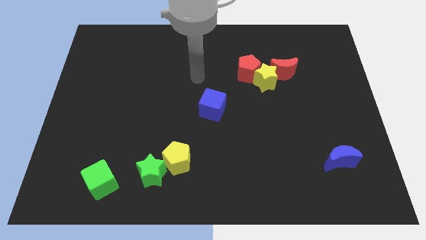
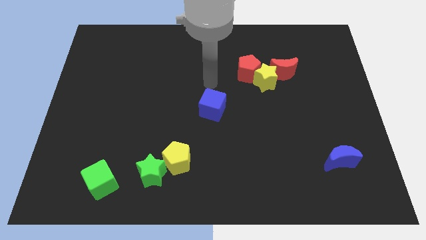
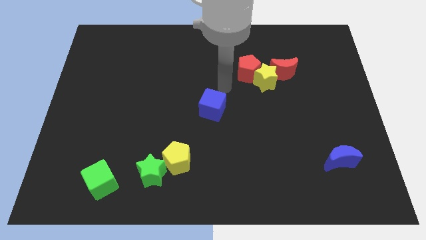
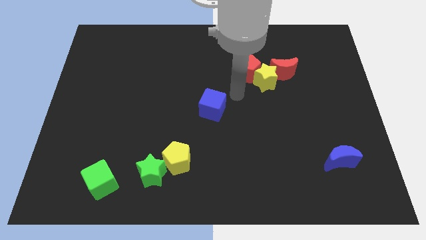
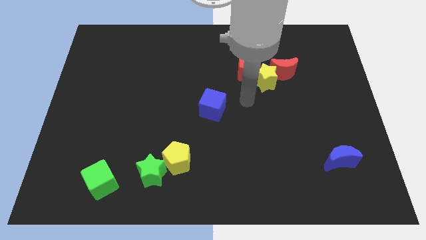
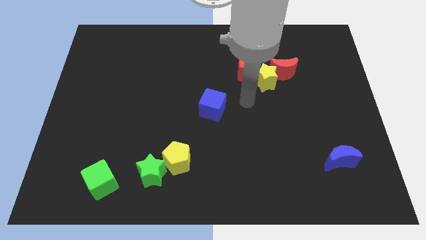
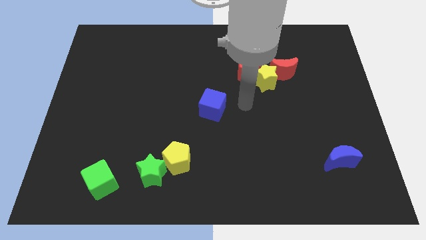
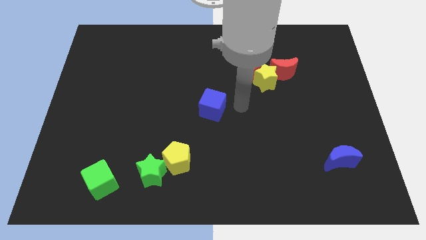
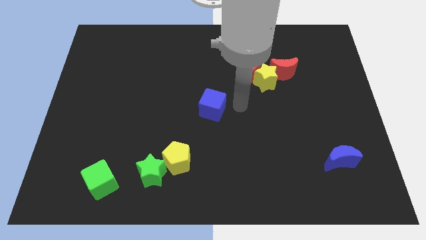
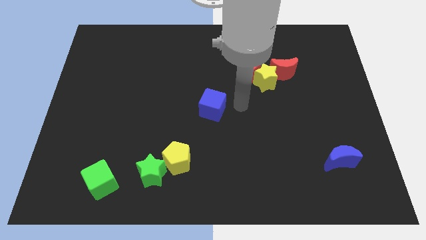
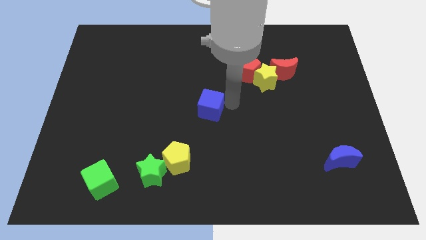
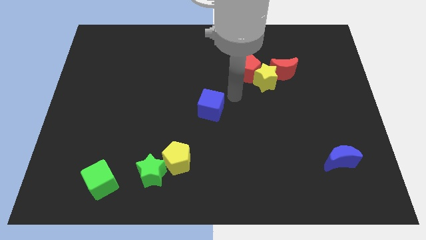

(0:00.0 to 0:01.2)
place your arm at the right of the blue cube

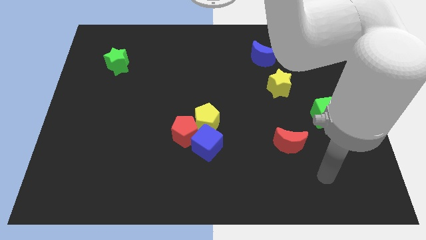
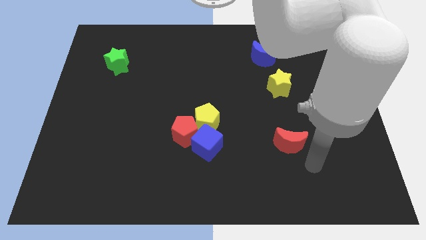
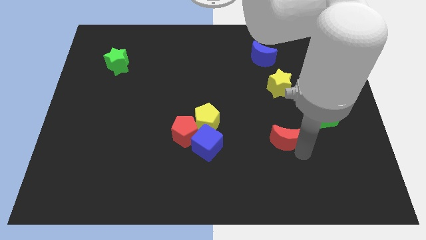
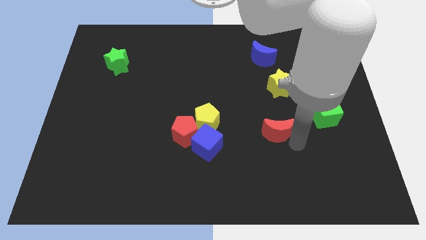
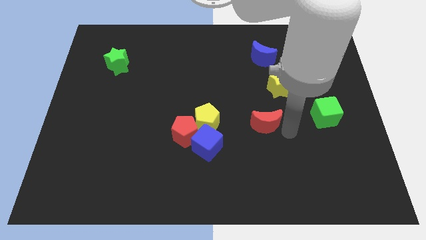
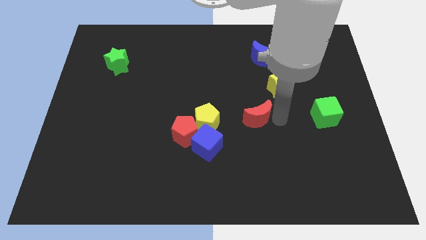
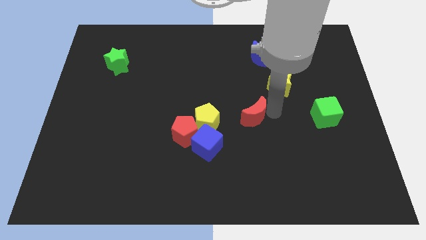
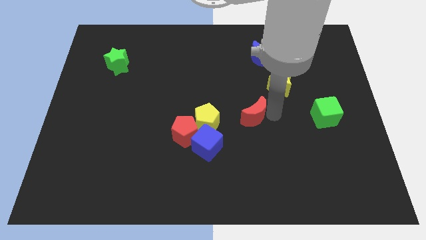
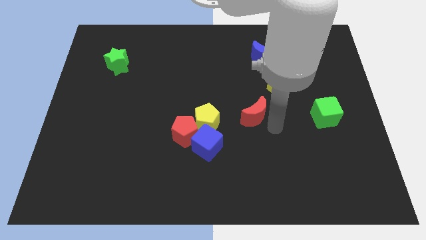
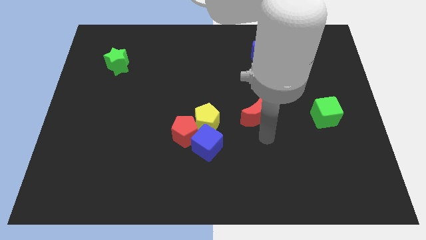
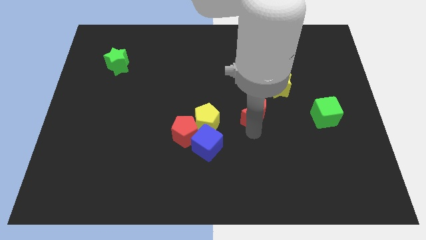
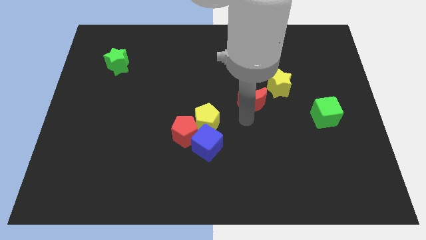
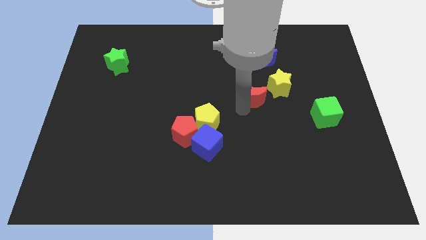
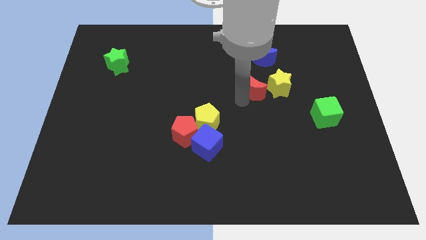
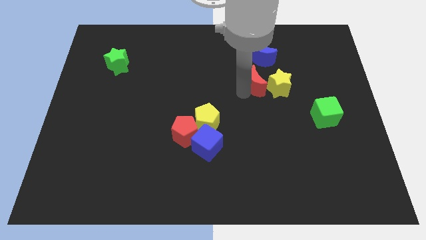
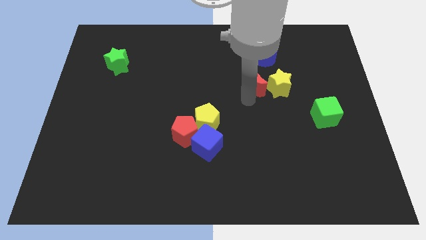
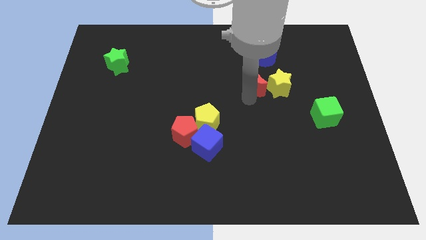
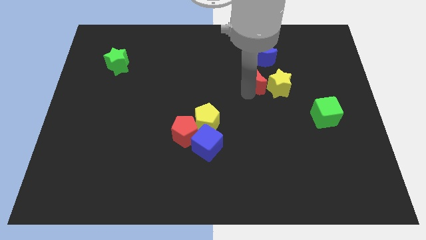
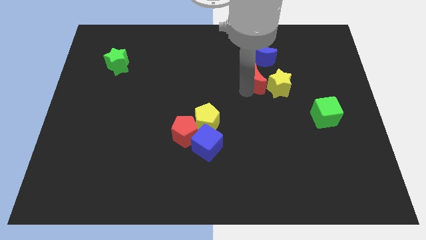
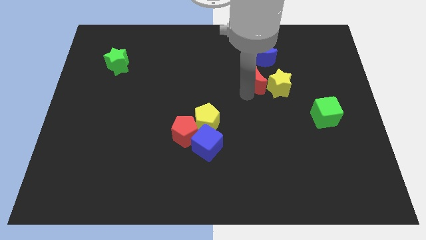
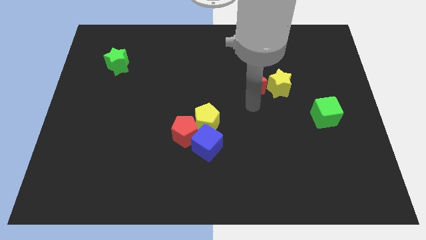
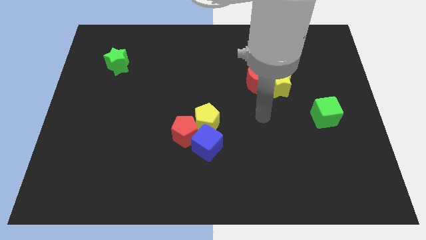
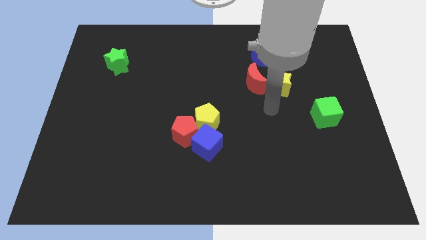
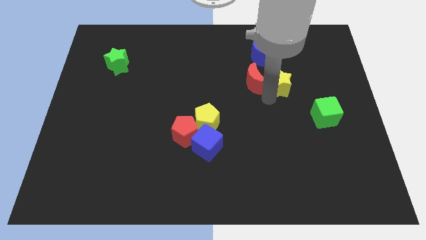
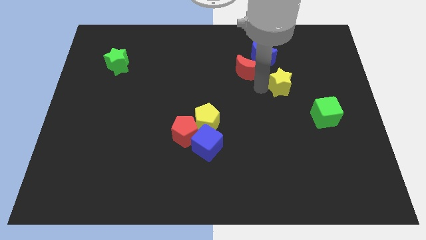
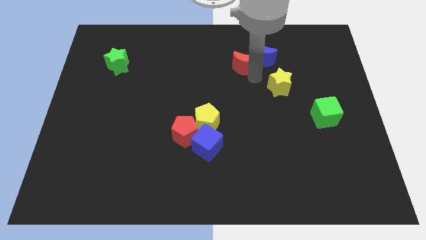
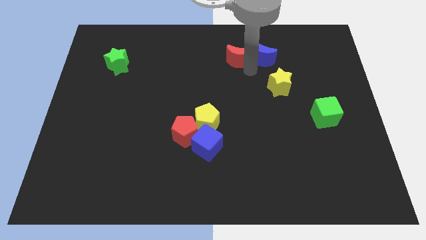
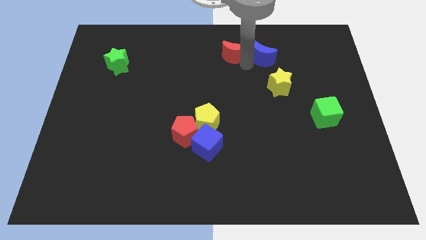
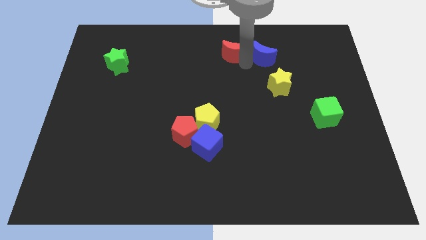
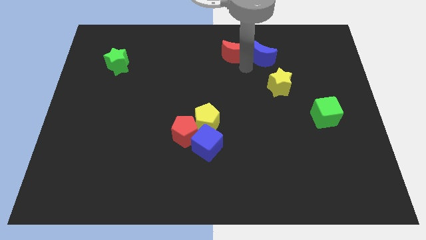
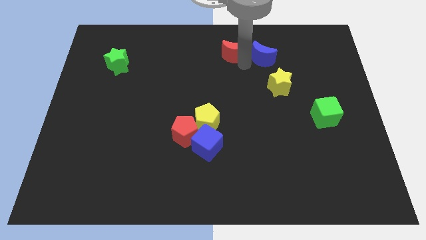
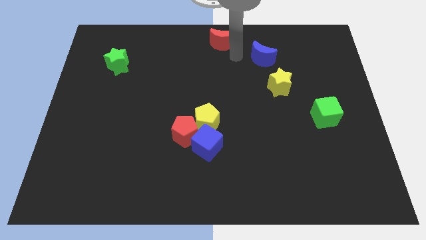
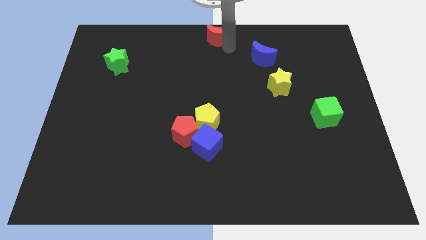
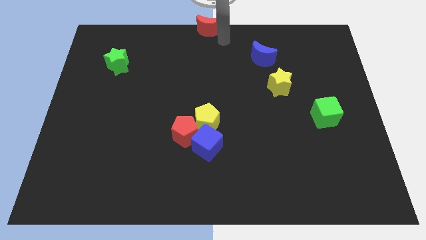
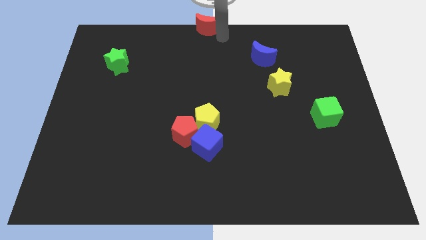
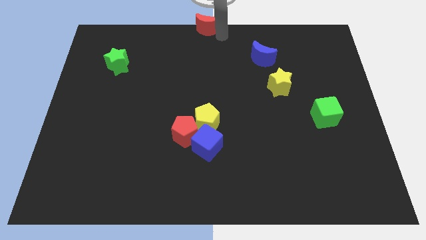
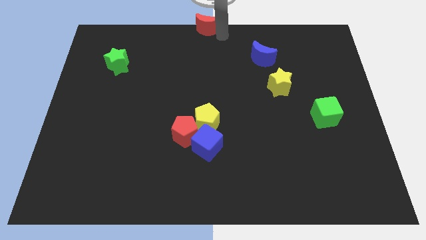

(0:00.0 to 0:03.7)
place red crescent to the top center

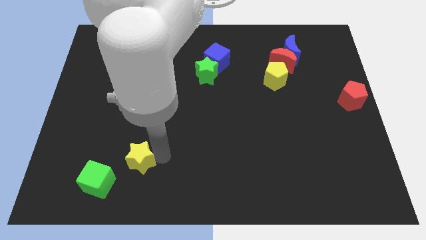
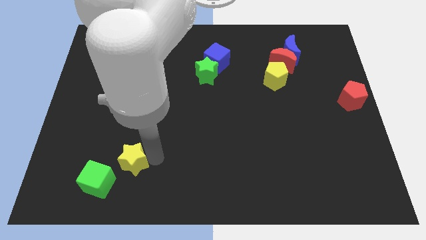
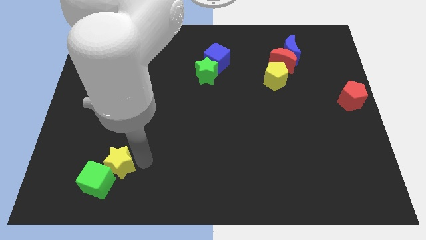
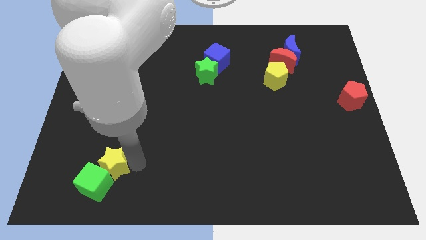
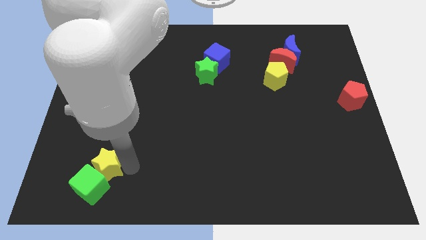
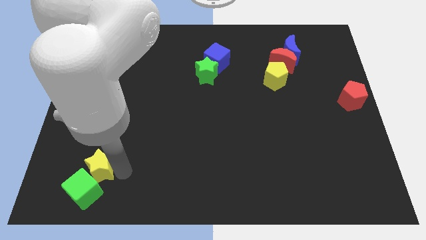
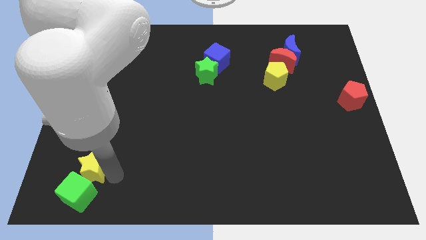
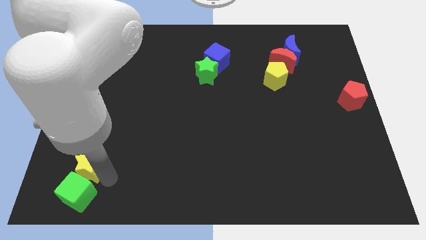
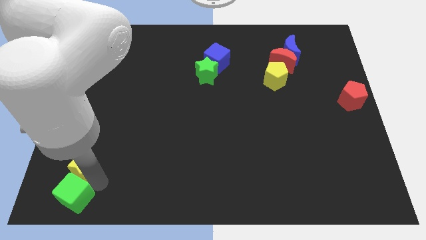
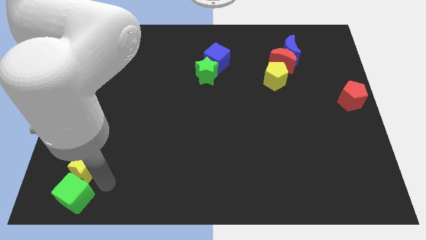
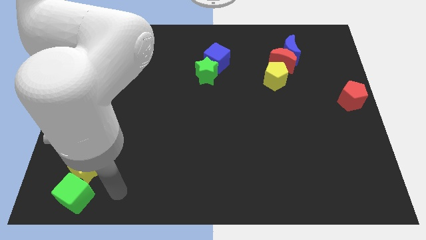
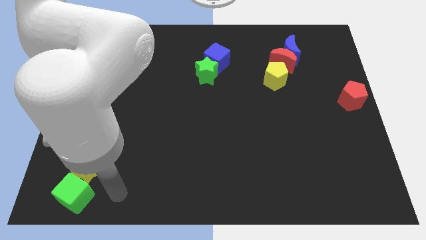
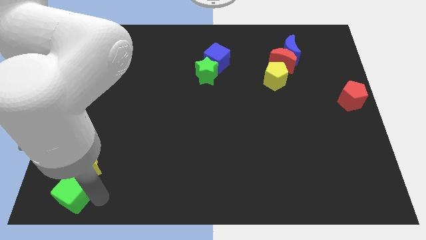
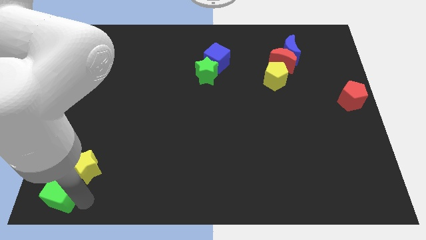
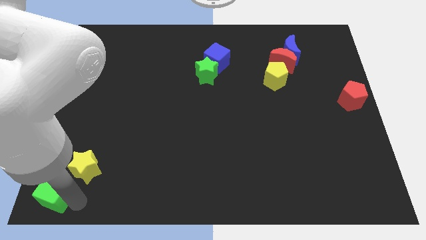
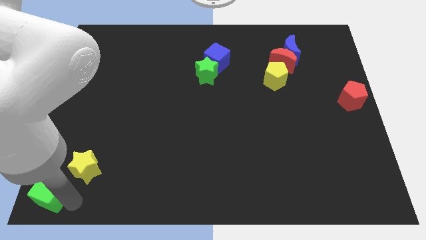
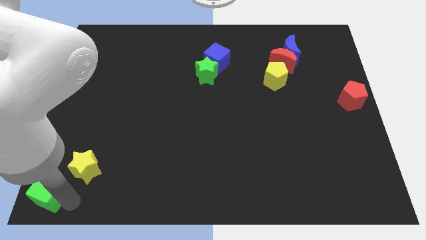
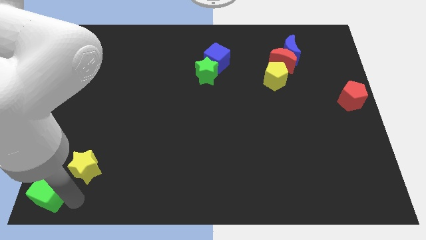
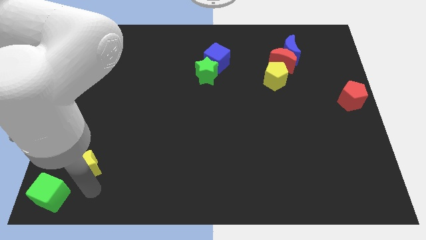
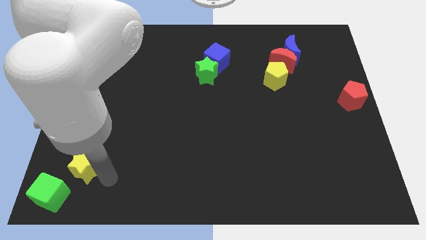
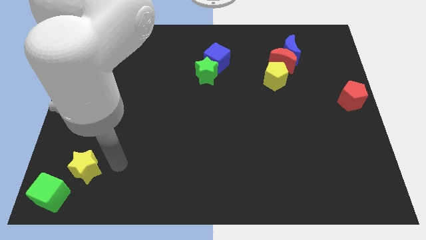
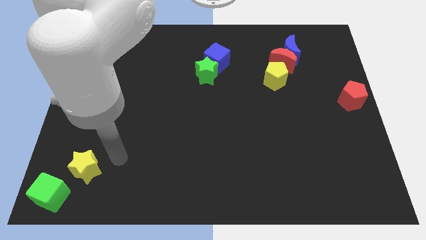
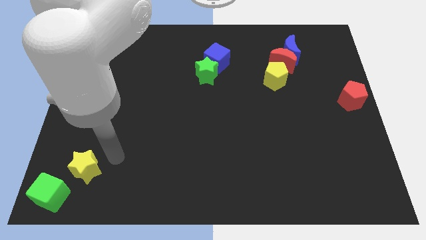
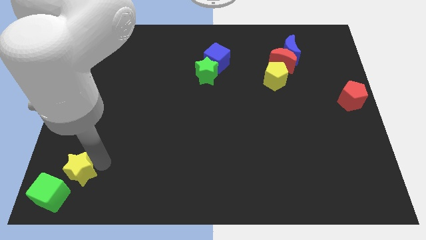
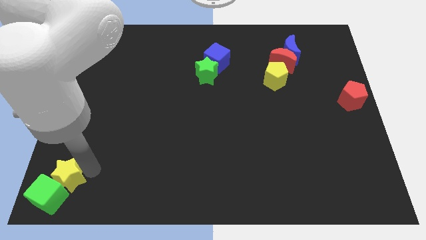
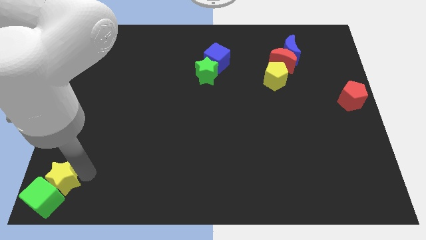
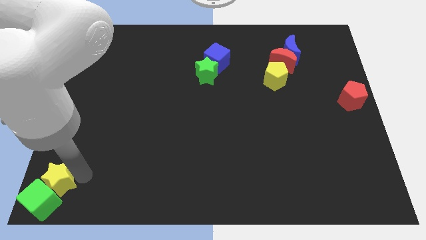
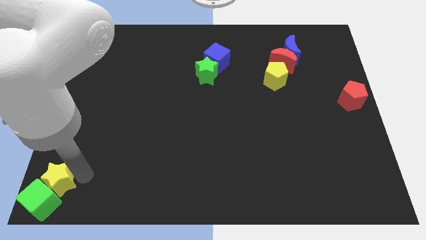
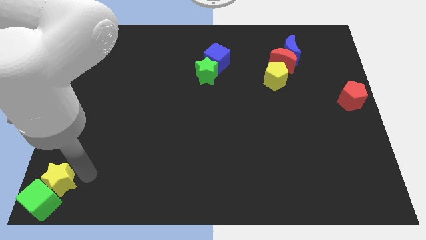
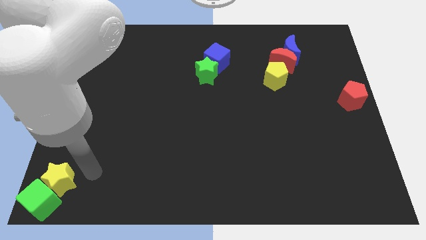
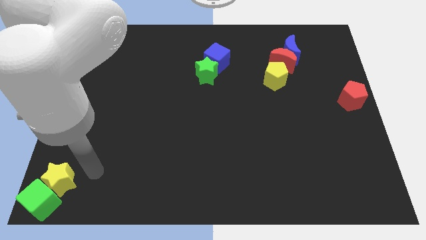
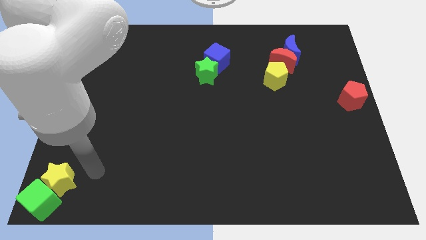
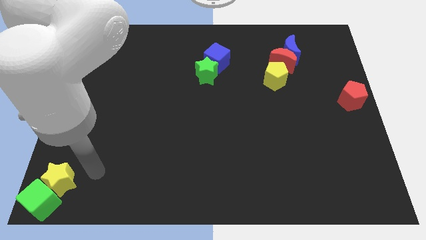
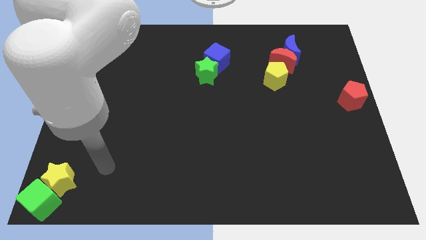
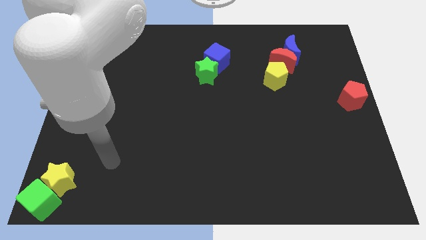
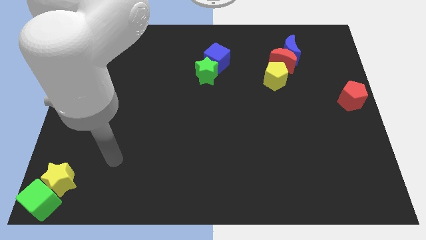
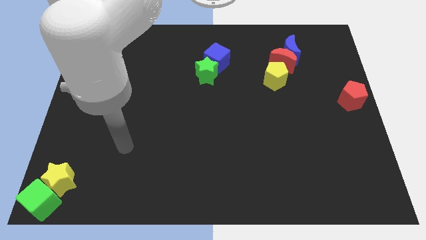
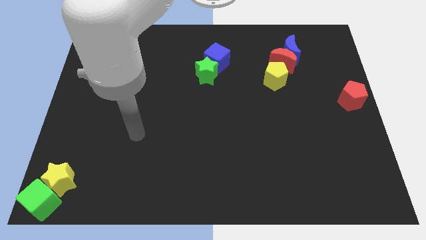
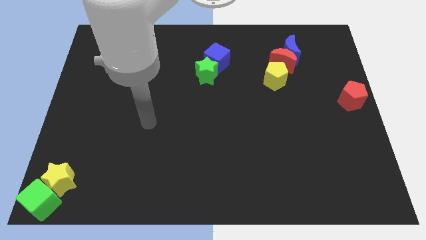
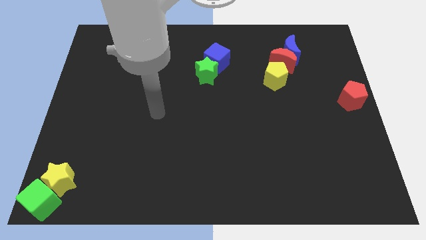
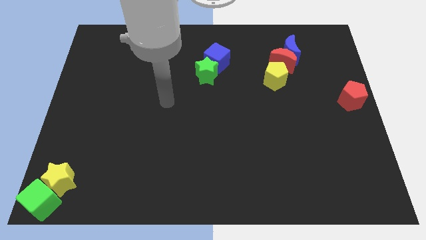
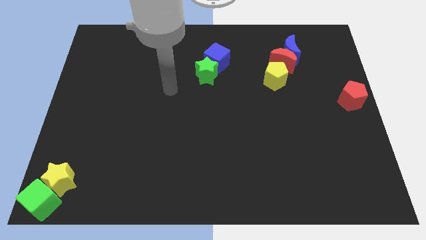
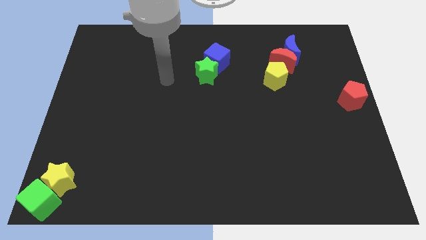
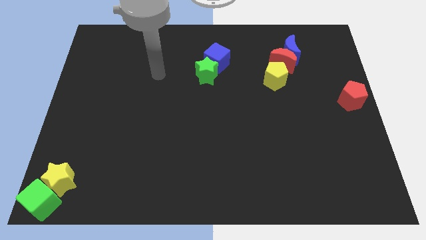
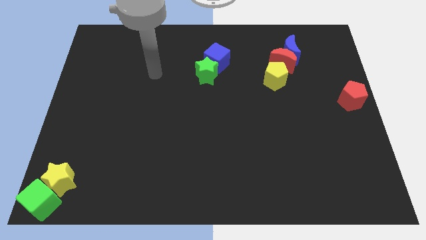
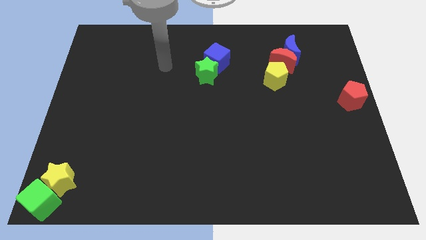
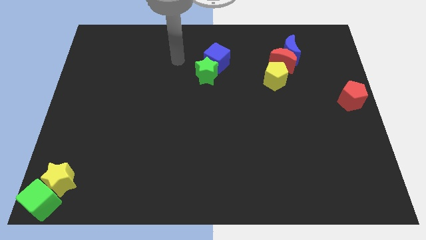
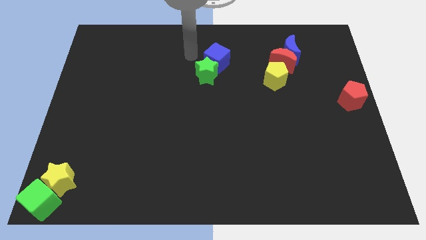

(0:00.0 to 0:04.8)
move the arm to the left of blue cube
